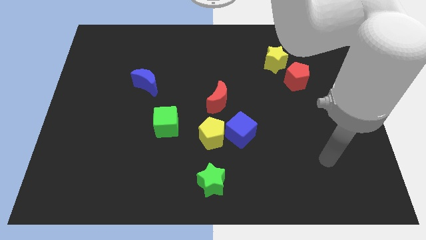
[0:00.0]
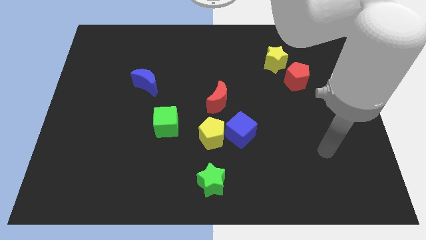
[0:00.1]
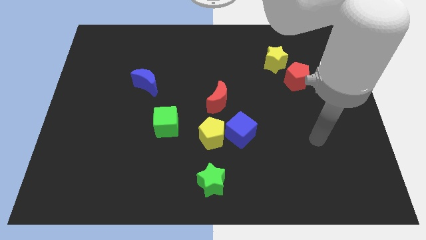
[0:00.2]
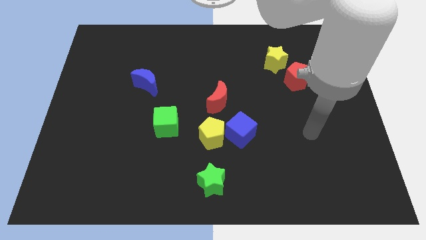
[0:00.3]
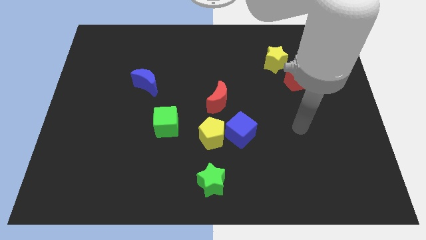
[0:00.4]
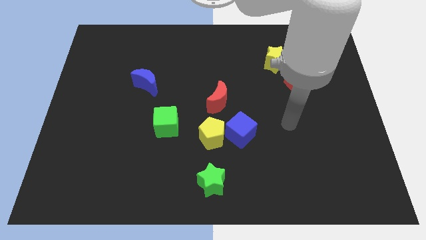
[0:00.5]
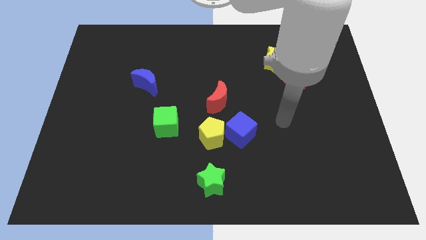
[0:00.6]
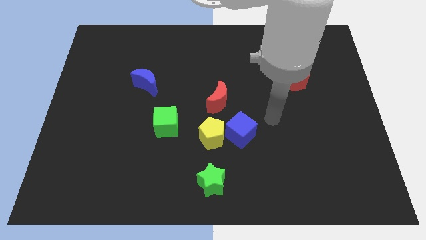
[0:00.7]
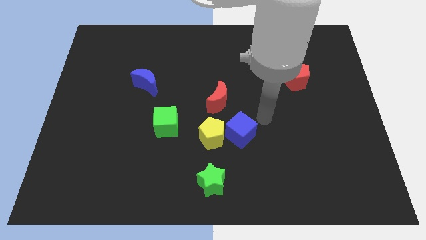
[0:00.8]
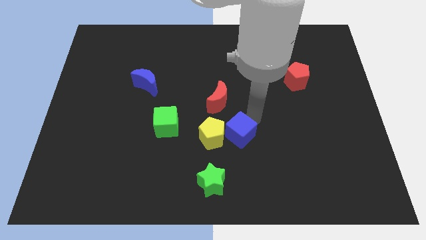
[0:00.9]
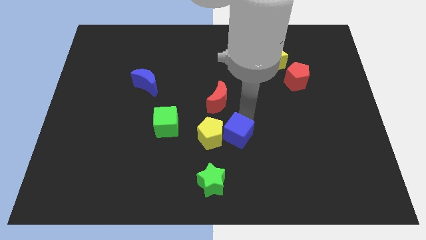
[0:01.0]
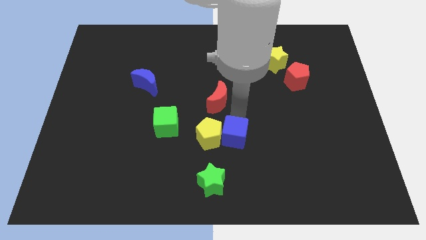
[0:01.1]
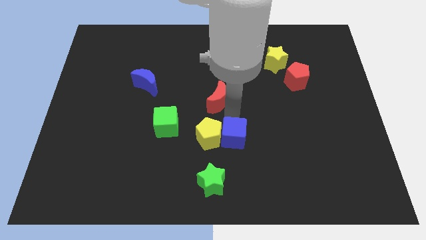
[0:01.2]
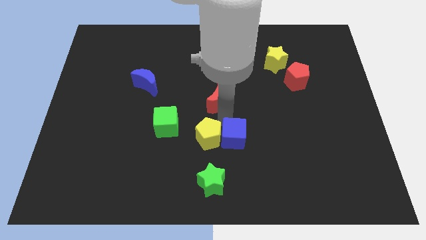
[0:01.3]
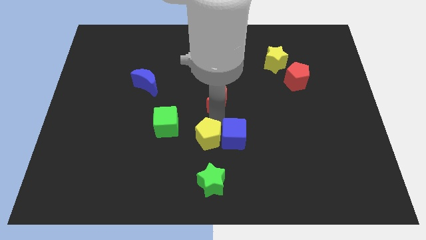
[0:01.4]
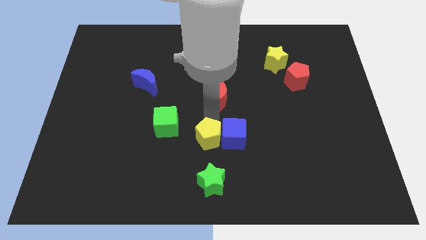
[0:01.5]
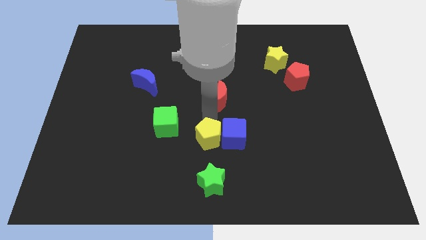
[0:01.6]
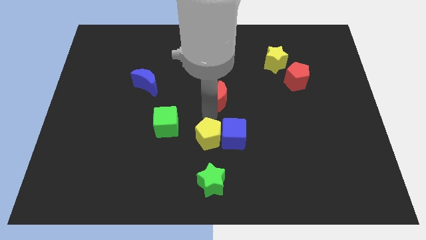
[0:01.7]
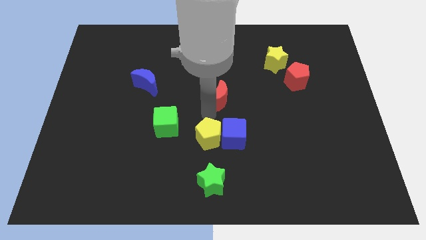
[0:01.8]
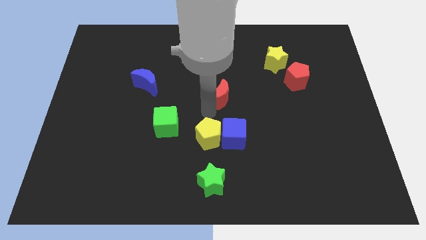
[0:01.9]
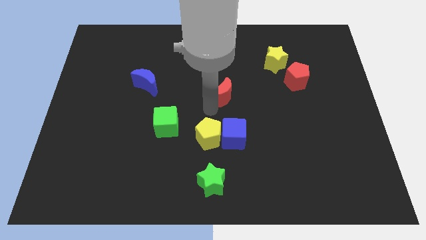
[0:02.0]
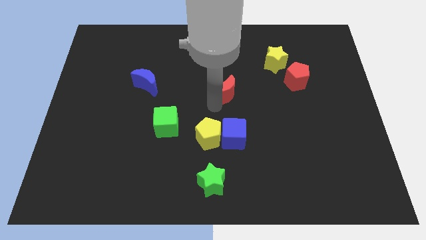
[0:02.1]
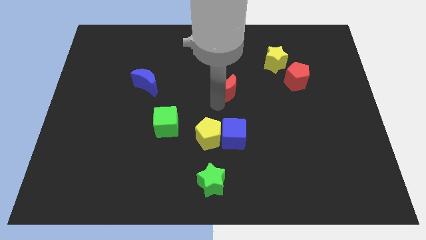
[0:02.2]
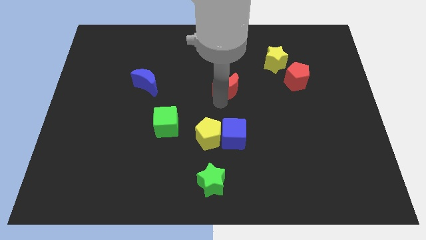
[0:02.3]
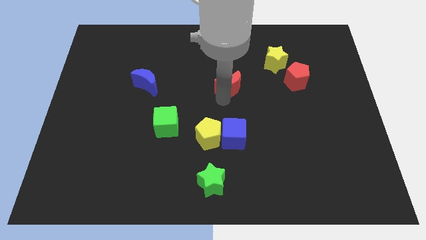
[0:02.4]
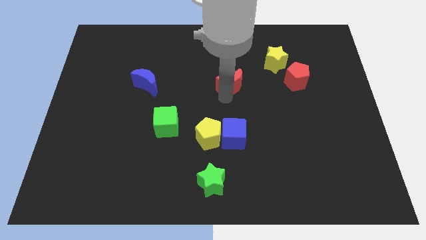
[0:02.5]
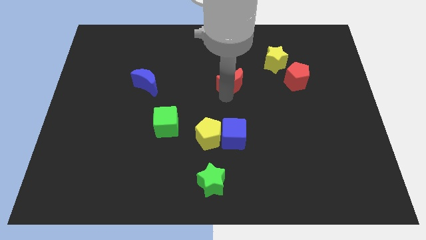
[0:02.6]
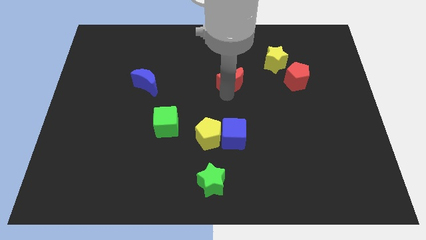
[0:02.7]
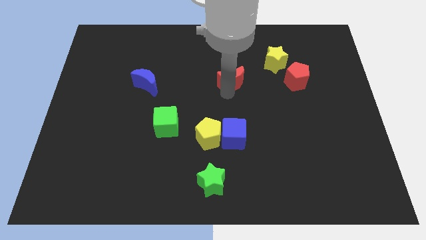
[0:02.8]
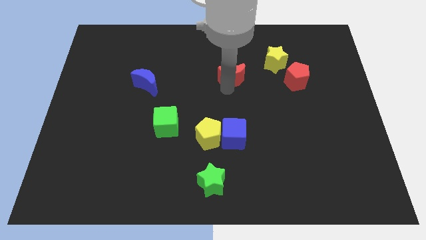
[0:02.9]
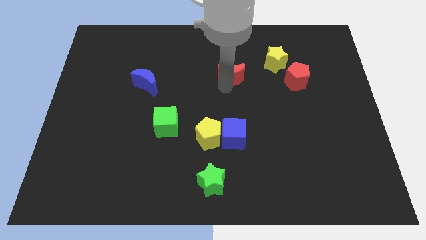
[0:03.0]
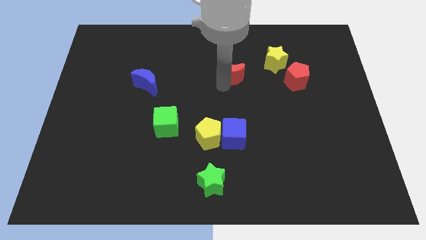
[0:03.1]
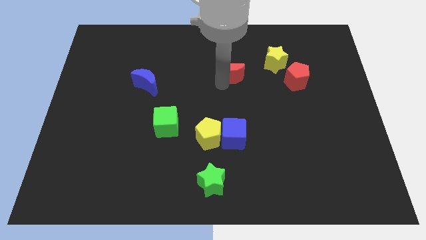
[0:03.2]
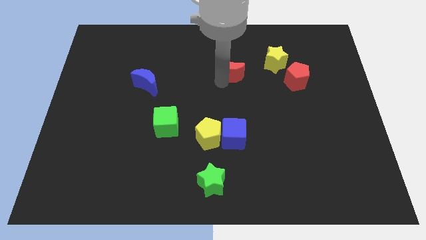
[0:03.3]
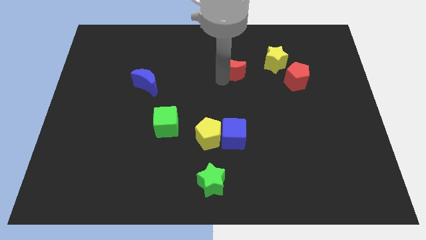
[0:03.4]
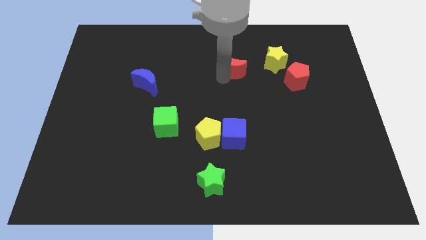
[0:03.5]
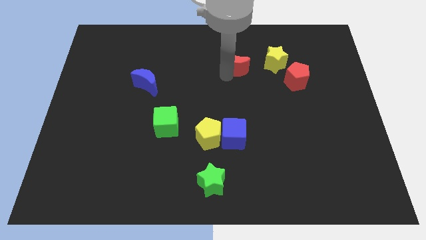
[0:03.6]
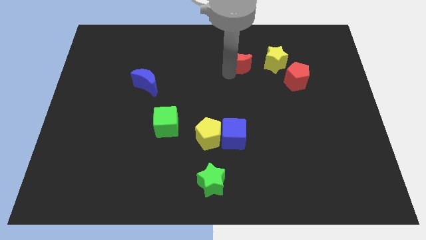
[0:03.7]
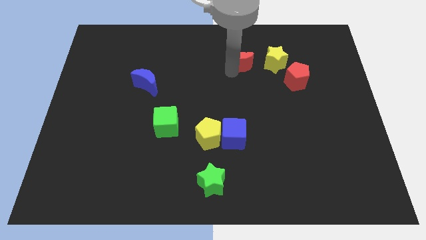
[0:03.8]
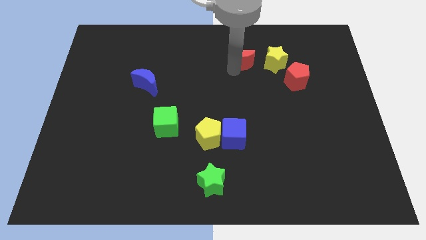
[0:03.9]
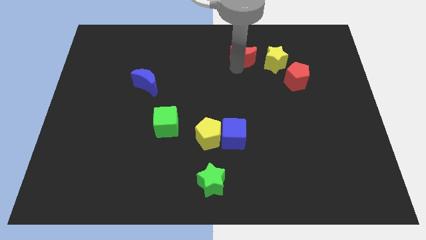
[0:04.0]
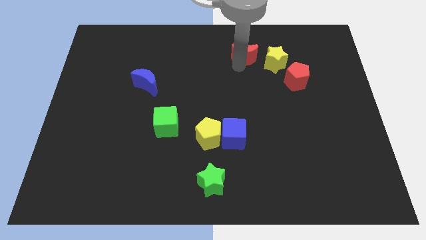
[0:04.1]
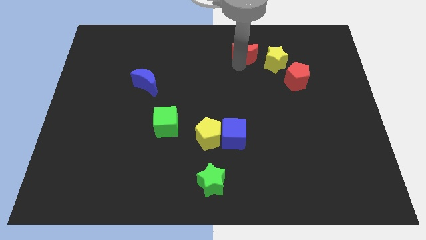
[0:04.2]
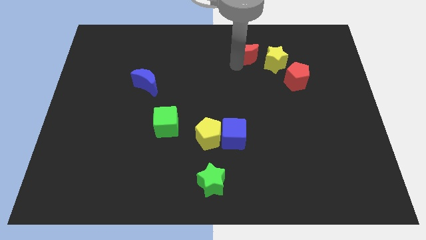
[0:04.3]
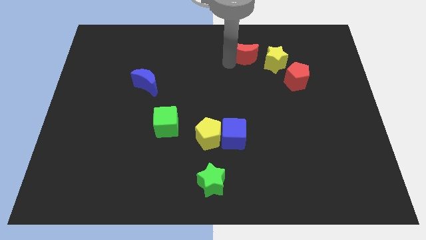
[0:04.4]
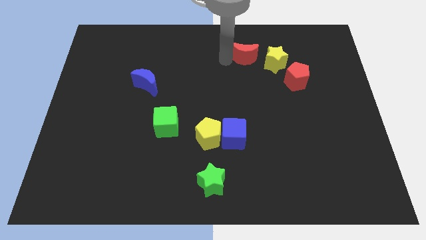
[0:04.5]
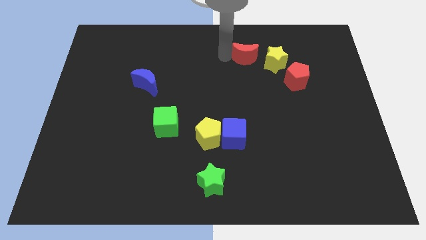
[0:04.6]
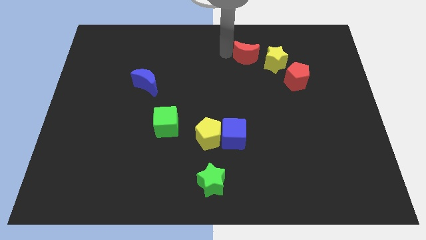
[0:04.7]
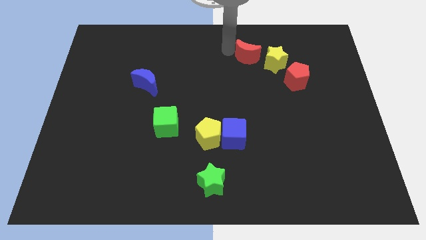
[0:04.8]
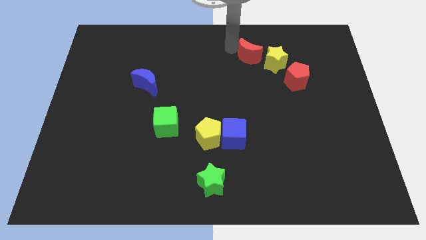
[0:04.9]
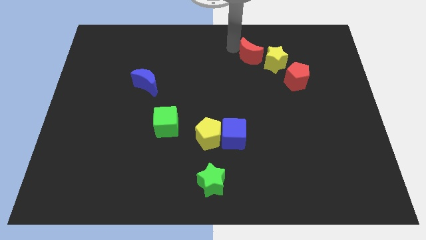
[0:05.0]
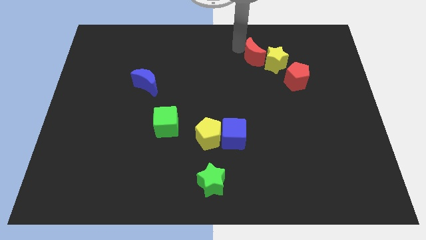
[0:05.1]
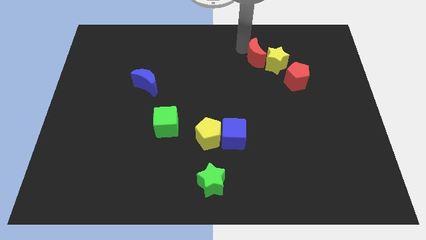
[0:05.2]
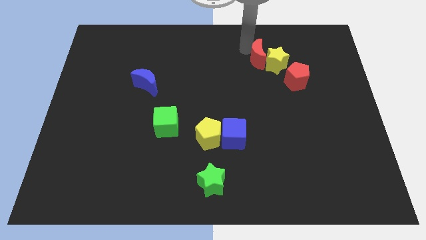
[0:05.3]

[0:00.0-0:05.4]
put the red moon to the yellow star

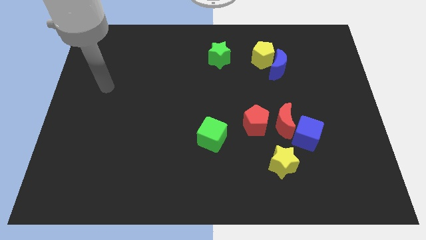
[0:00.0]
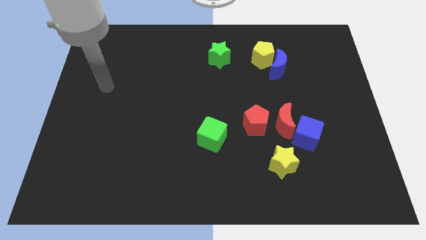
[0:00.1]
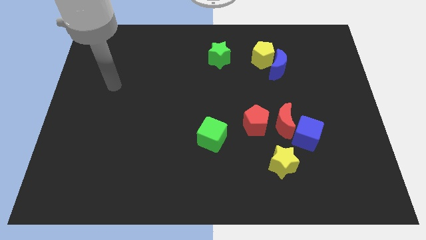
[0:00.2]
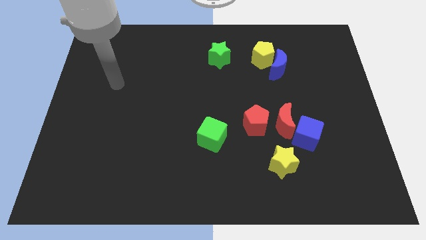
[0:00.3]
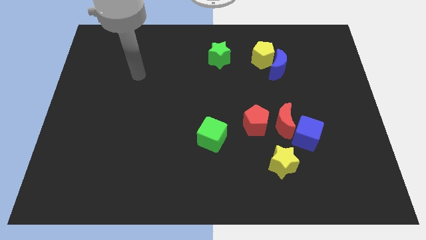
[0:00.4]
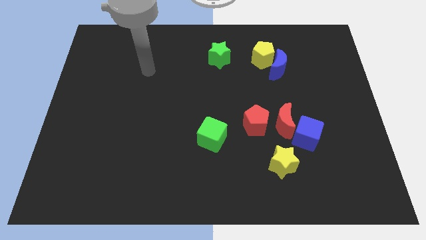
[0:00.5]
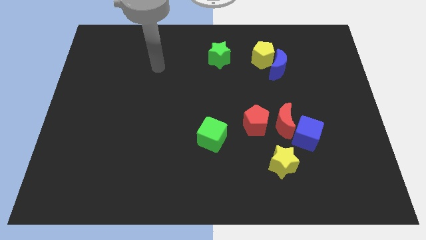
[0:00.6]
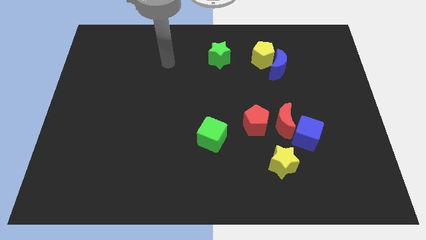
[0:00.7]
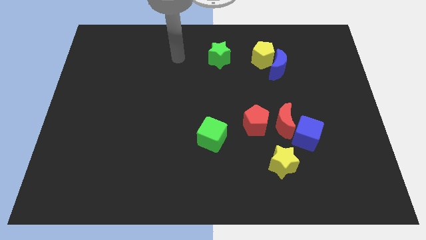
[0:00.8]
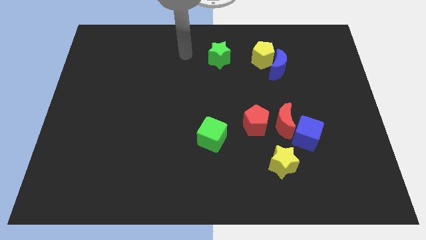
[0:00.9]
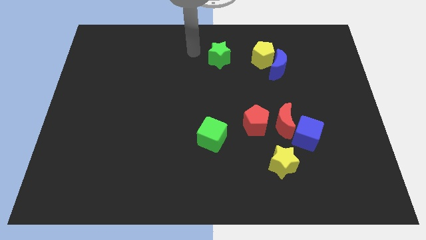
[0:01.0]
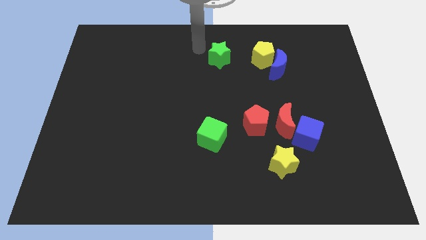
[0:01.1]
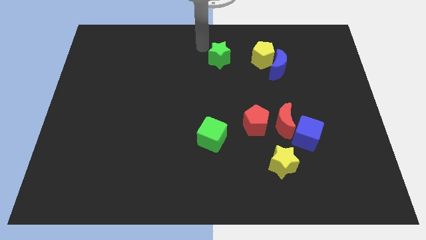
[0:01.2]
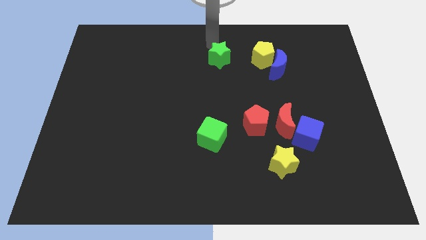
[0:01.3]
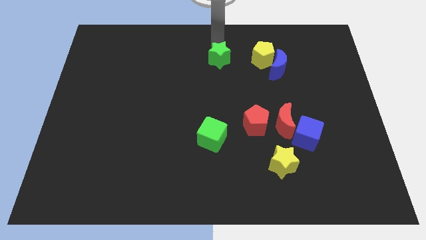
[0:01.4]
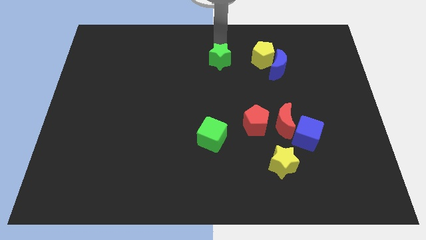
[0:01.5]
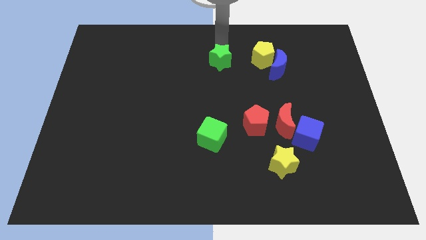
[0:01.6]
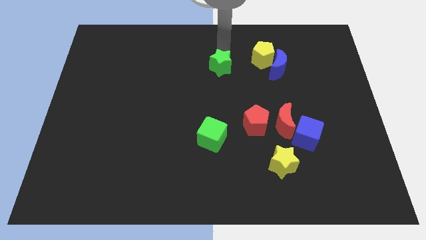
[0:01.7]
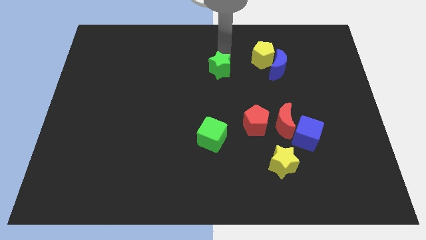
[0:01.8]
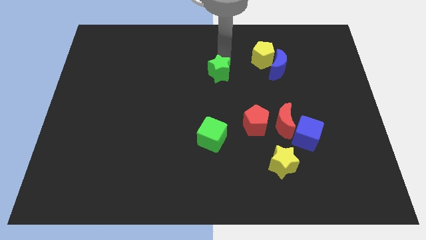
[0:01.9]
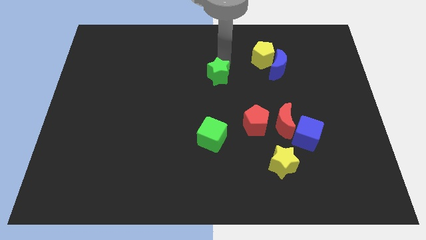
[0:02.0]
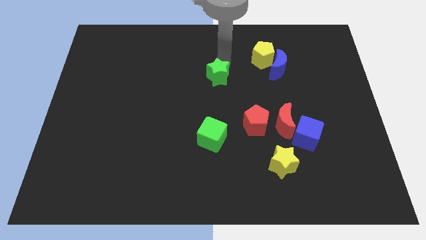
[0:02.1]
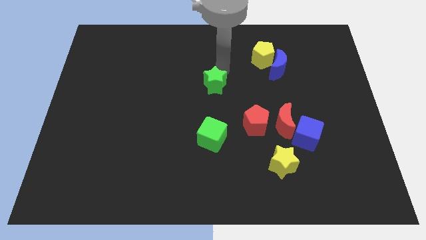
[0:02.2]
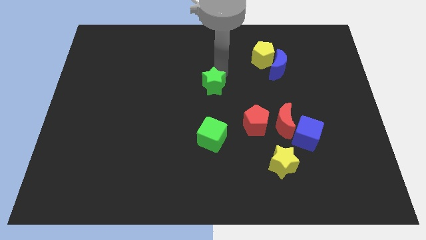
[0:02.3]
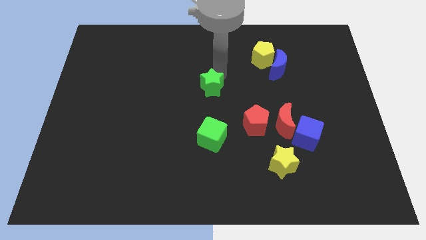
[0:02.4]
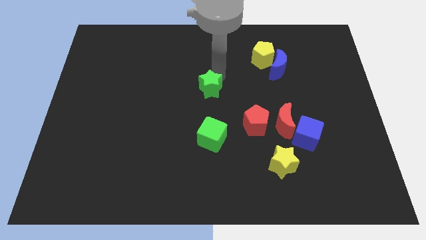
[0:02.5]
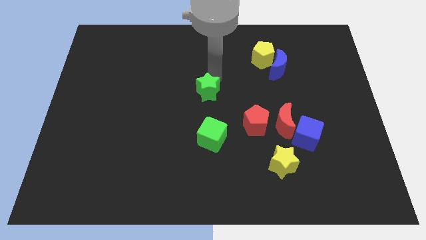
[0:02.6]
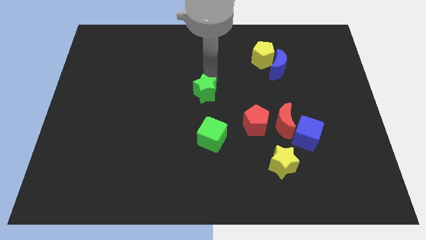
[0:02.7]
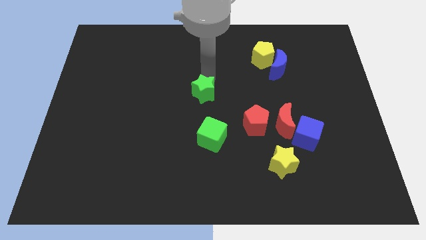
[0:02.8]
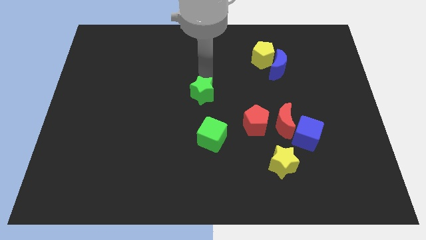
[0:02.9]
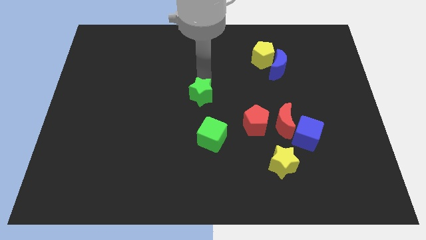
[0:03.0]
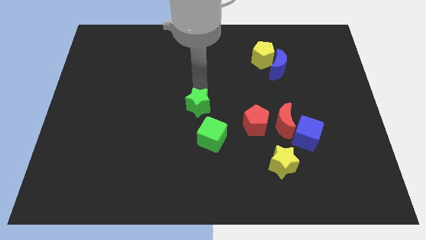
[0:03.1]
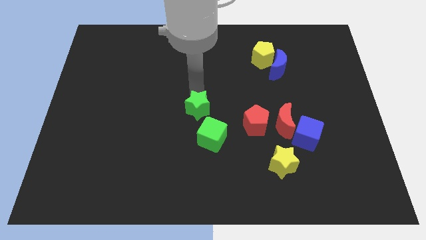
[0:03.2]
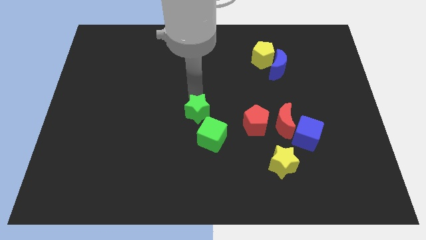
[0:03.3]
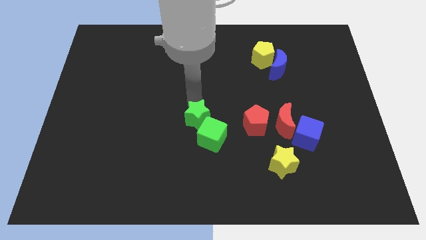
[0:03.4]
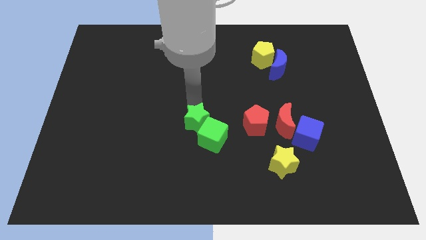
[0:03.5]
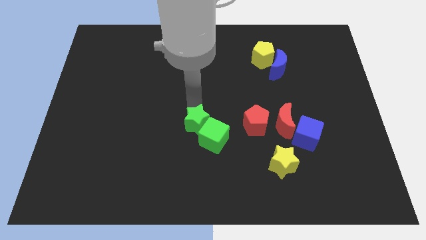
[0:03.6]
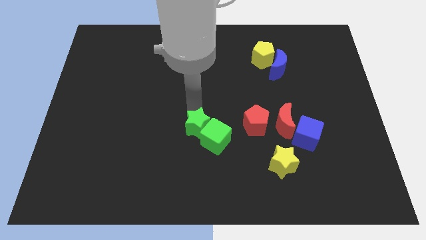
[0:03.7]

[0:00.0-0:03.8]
move the green star towards the green cube
